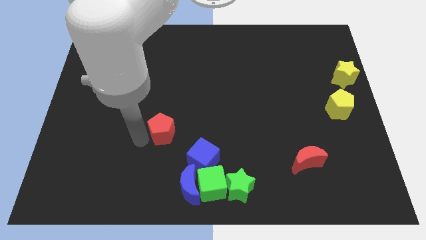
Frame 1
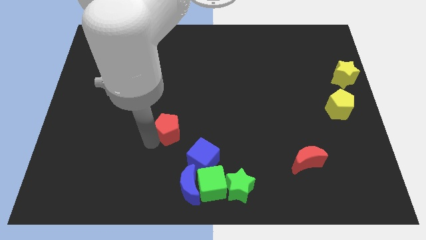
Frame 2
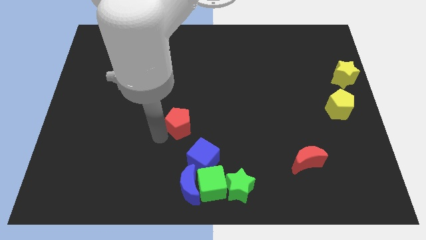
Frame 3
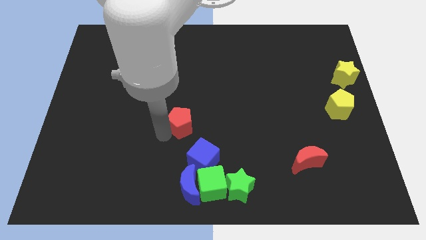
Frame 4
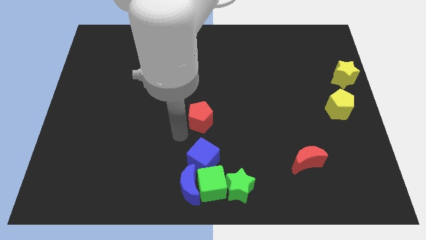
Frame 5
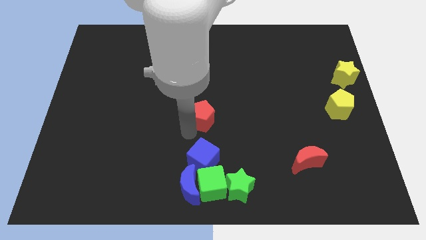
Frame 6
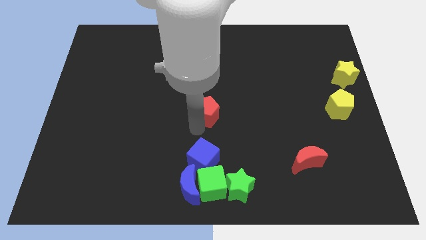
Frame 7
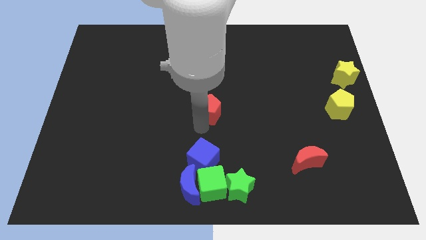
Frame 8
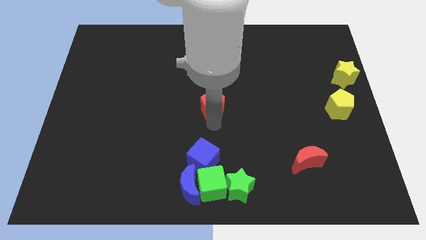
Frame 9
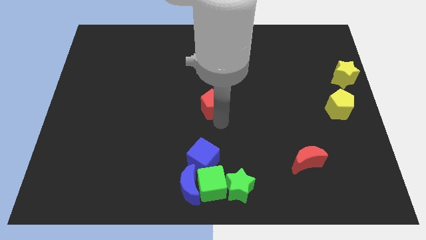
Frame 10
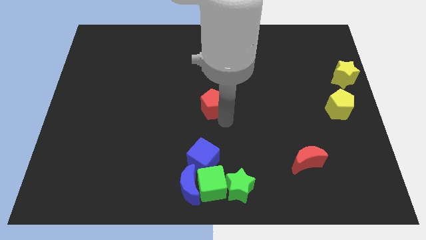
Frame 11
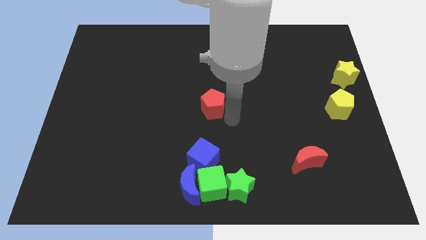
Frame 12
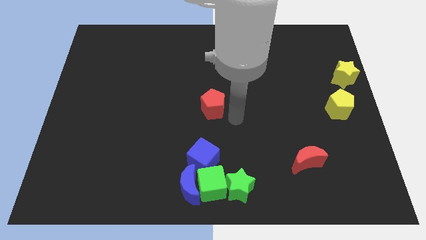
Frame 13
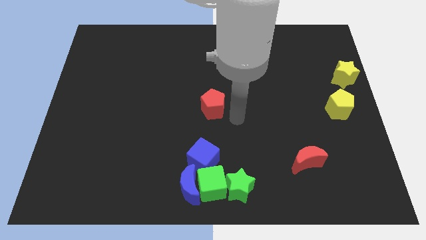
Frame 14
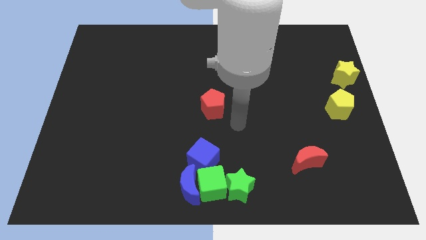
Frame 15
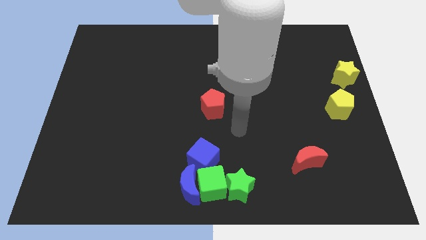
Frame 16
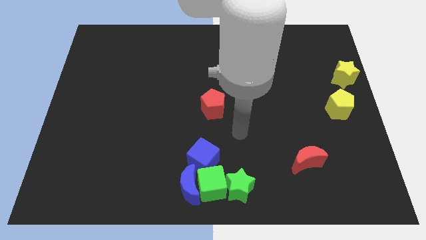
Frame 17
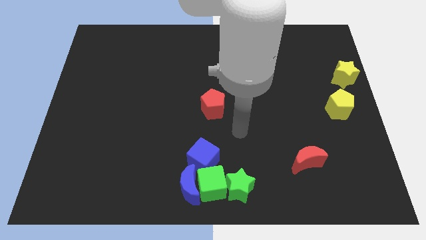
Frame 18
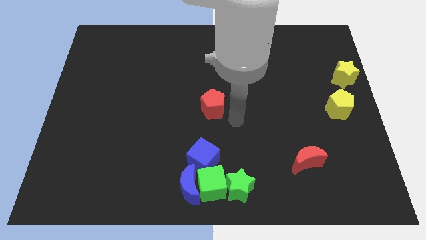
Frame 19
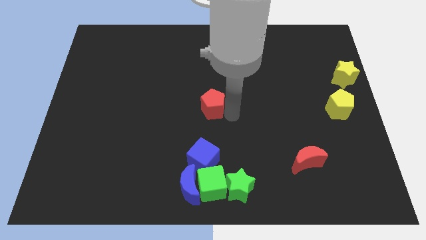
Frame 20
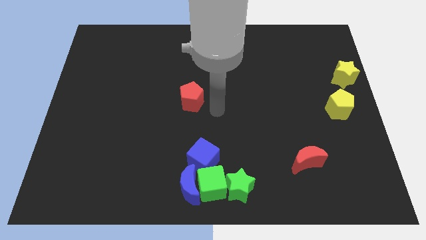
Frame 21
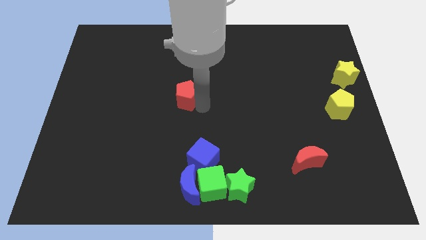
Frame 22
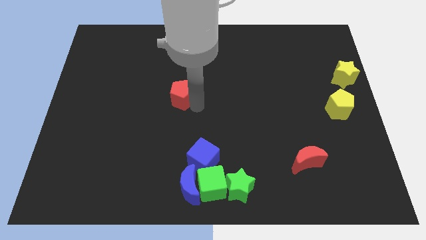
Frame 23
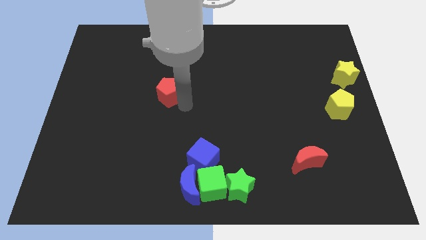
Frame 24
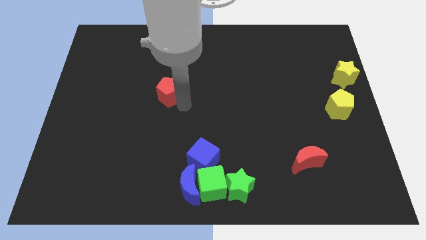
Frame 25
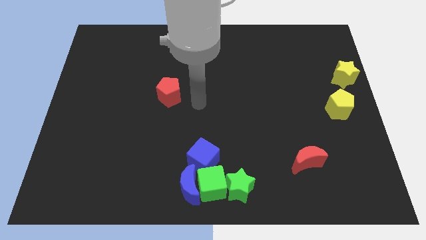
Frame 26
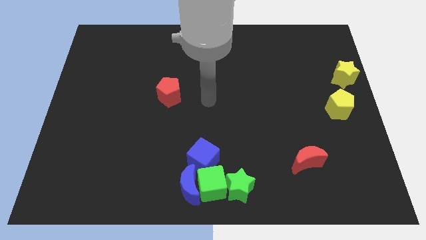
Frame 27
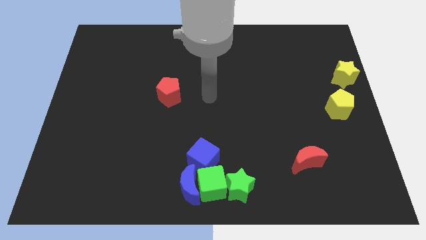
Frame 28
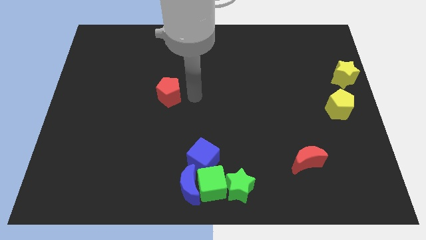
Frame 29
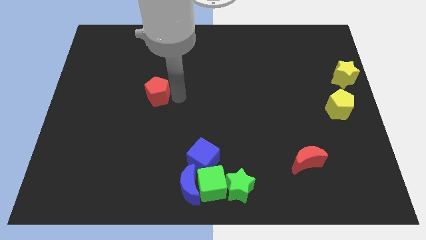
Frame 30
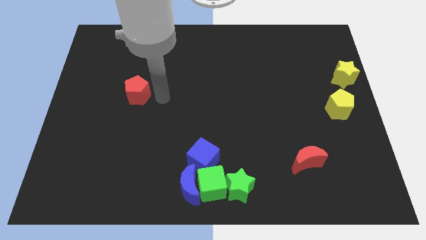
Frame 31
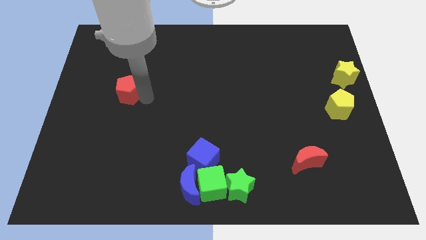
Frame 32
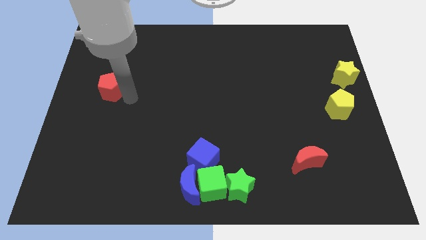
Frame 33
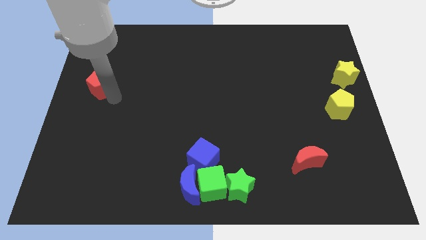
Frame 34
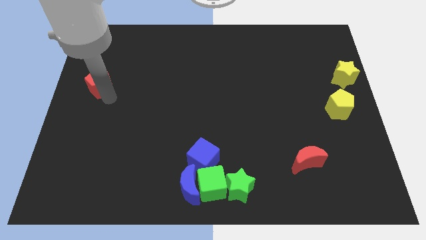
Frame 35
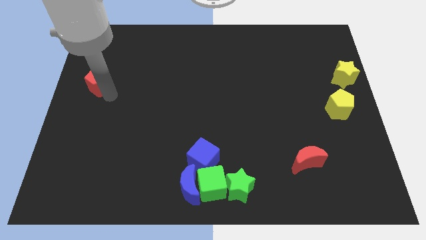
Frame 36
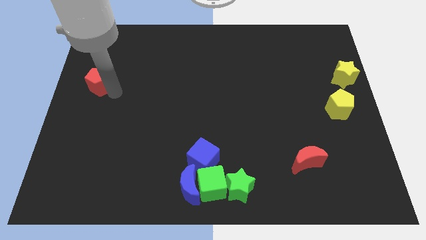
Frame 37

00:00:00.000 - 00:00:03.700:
drag the red pentagon towards the top left side of the board

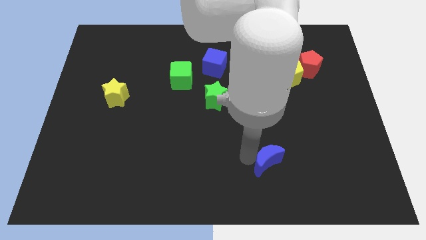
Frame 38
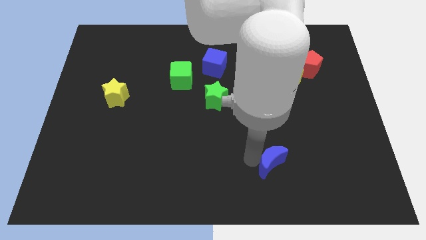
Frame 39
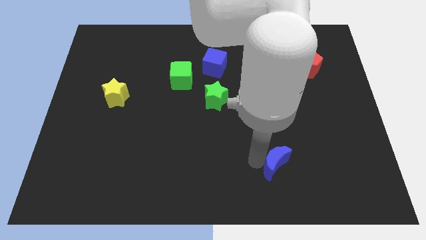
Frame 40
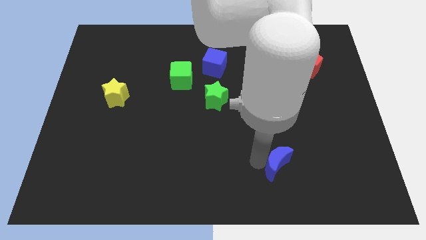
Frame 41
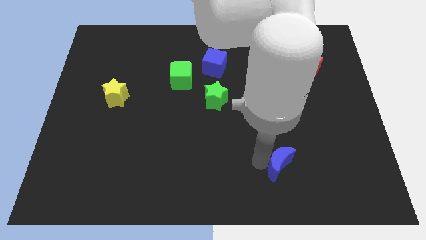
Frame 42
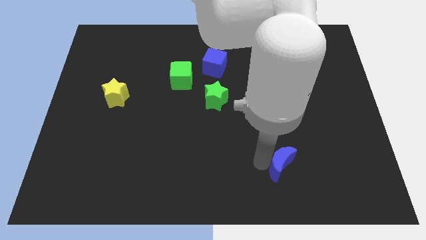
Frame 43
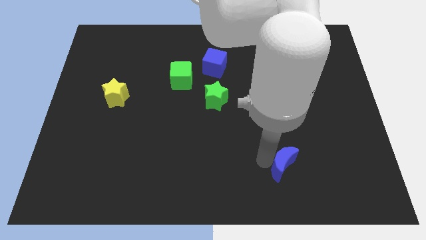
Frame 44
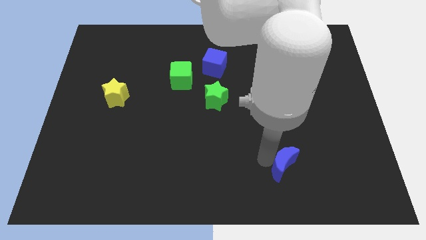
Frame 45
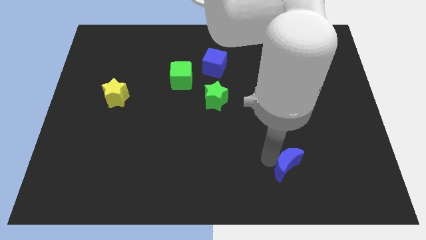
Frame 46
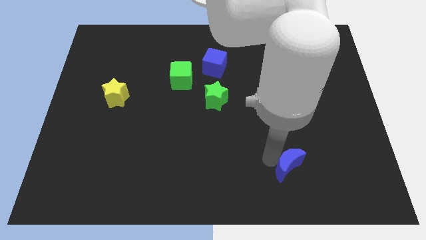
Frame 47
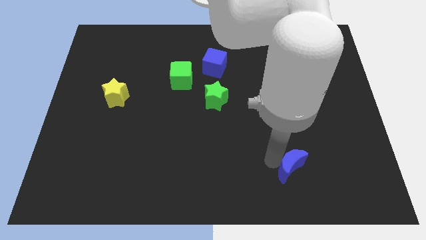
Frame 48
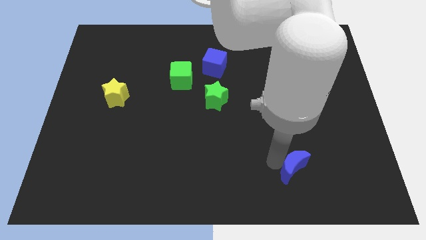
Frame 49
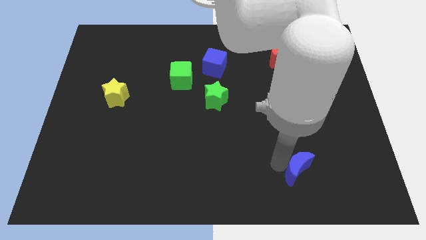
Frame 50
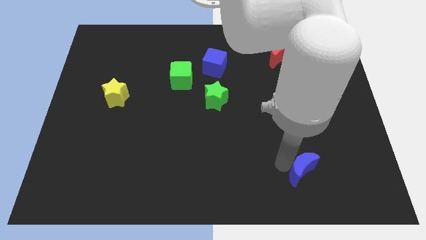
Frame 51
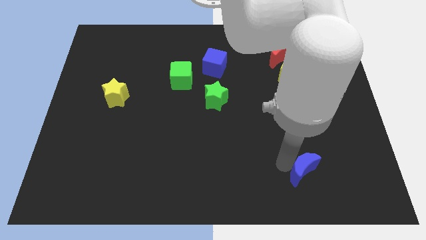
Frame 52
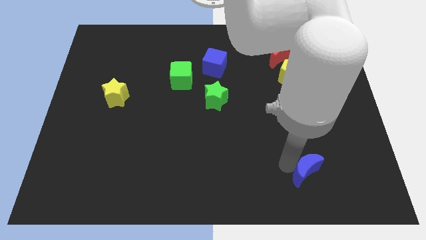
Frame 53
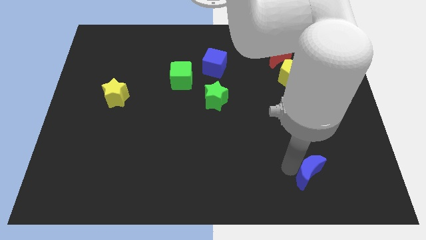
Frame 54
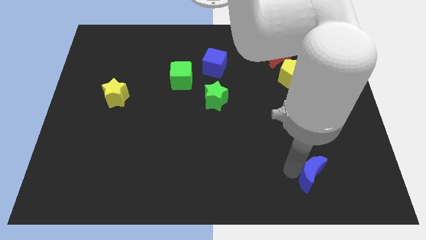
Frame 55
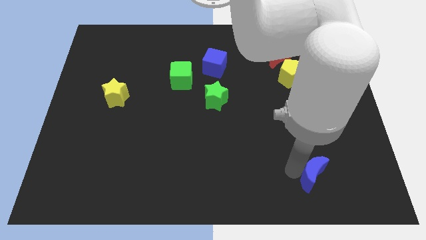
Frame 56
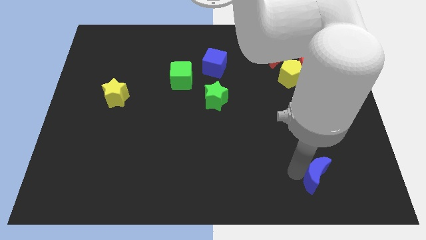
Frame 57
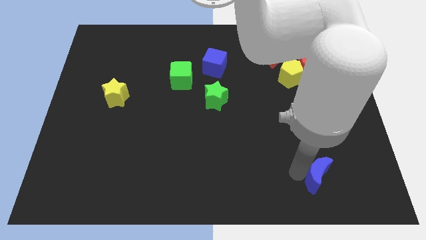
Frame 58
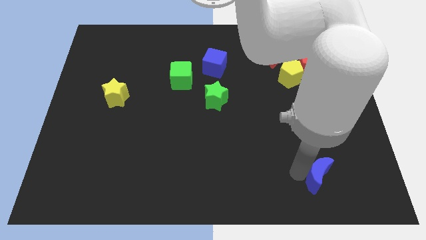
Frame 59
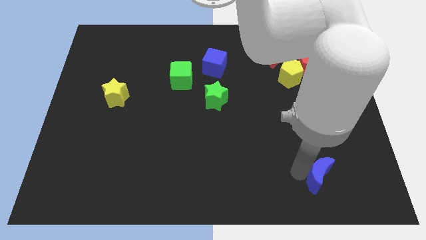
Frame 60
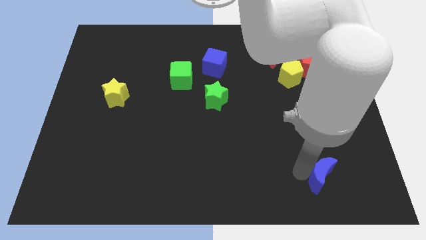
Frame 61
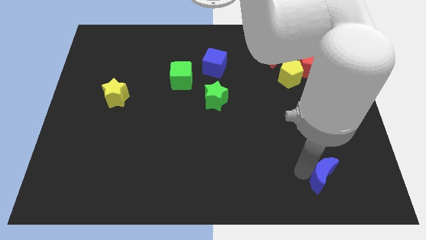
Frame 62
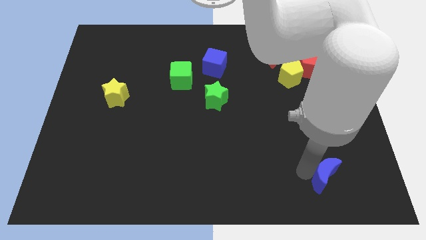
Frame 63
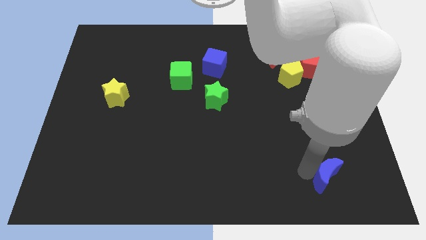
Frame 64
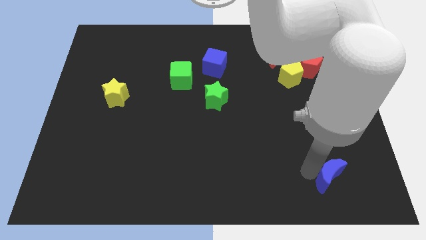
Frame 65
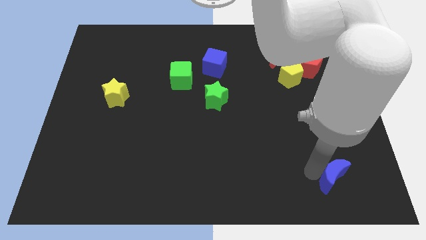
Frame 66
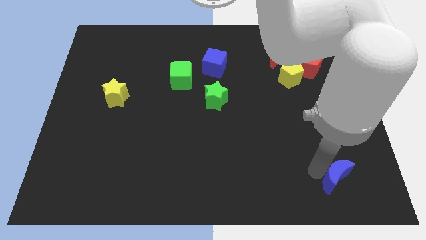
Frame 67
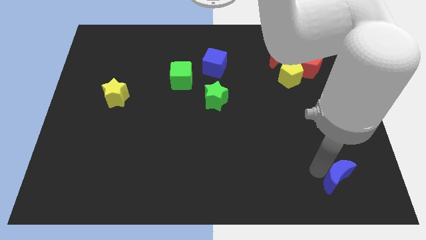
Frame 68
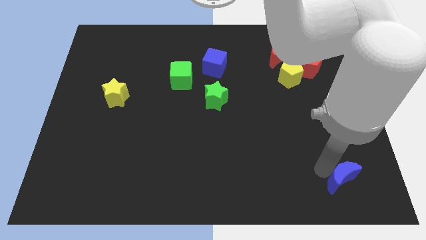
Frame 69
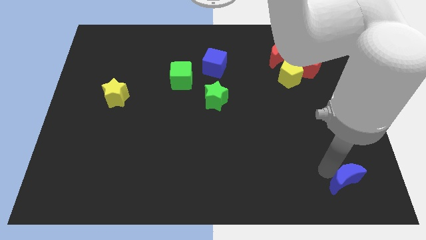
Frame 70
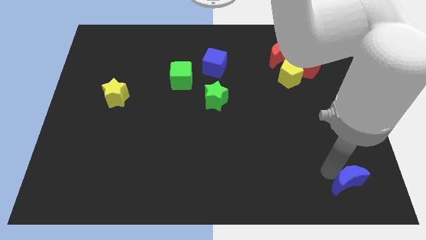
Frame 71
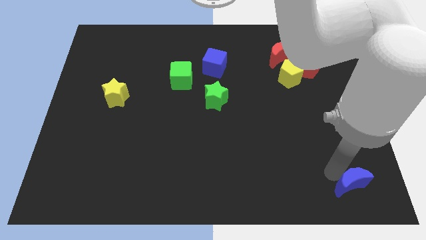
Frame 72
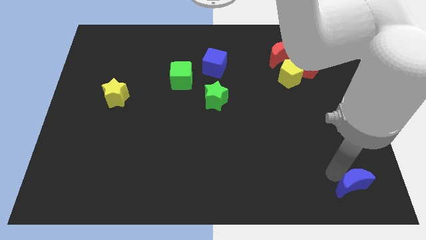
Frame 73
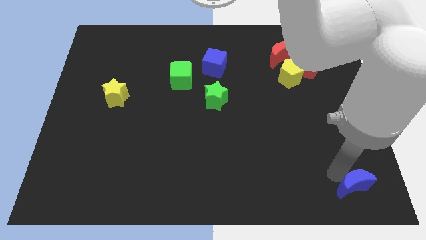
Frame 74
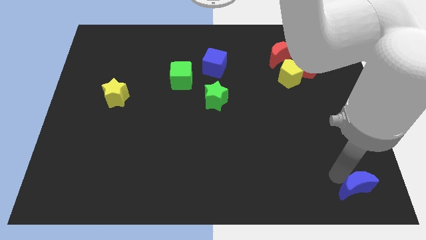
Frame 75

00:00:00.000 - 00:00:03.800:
move the blue moon vertically at the bottom side of the red pentagon

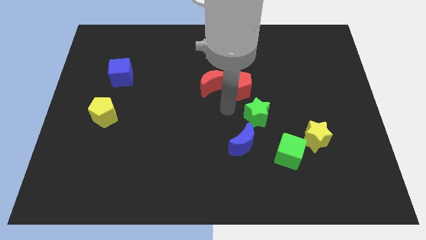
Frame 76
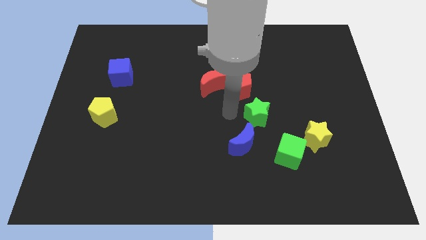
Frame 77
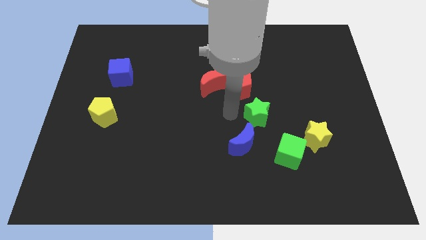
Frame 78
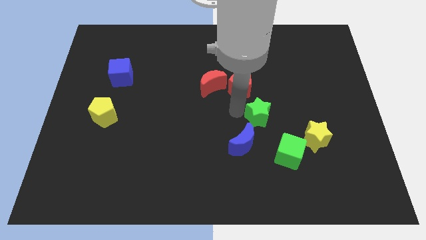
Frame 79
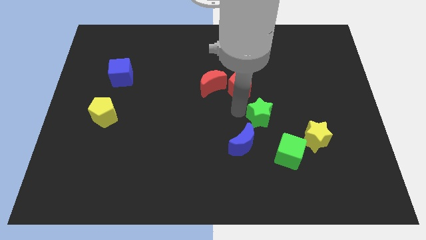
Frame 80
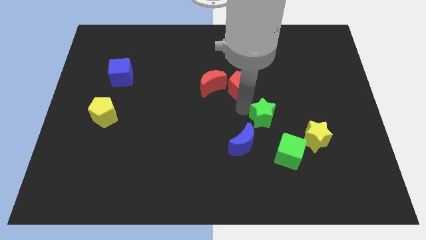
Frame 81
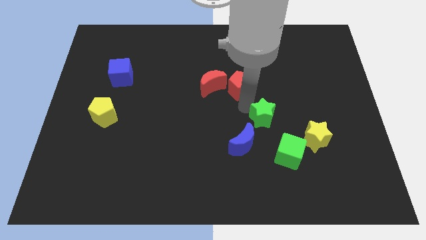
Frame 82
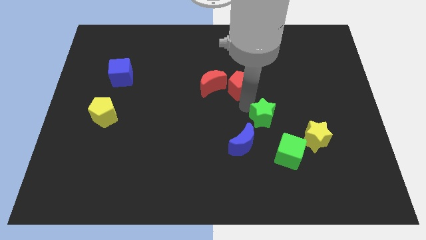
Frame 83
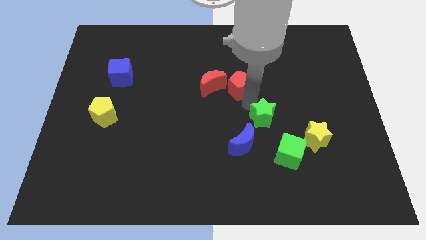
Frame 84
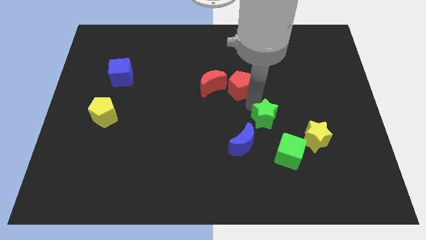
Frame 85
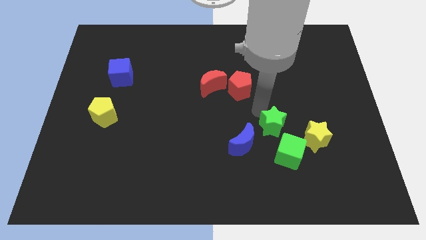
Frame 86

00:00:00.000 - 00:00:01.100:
move the green star to the top right of the blue crescent

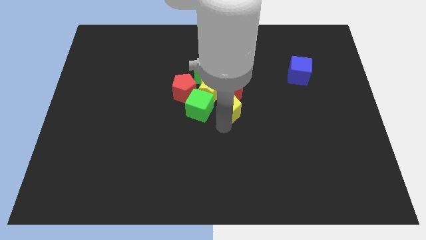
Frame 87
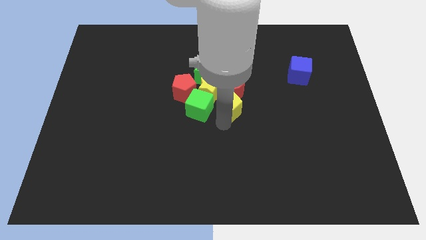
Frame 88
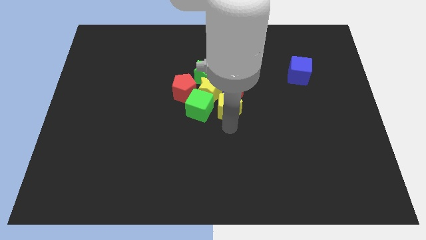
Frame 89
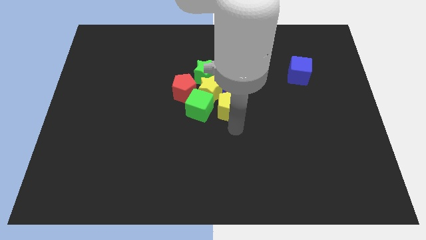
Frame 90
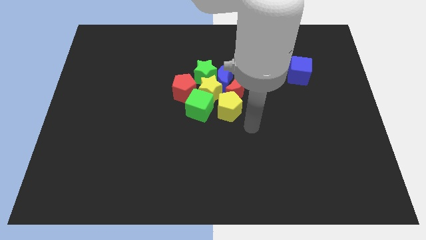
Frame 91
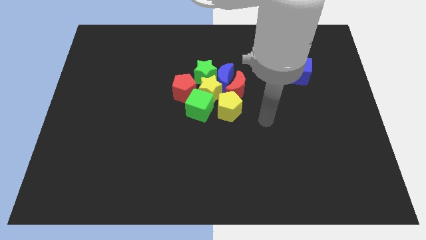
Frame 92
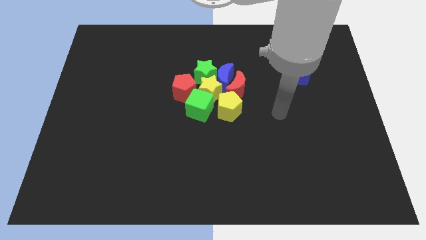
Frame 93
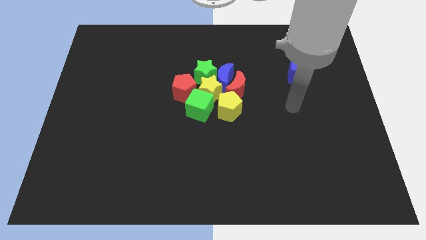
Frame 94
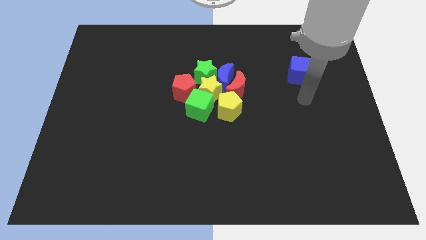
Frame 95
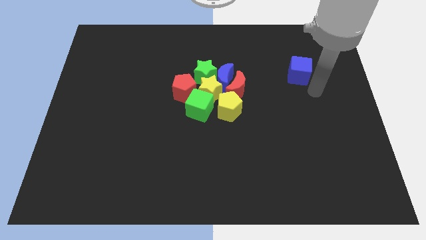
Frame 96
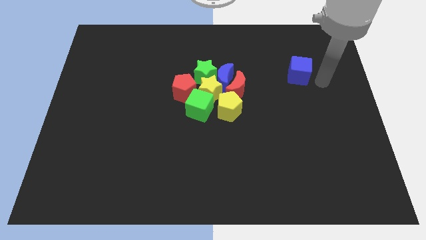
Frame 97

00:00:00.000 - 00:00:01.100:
move the arm away from the yellow pentagon
